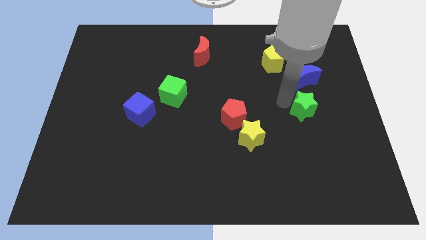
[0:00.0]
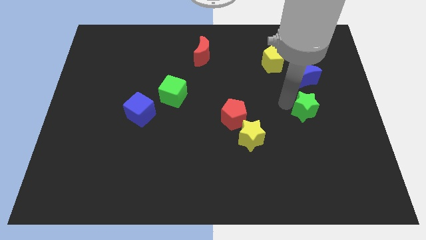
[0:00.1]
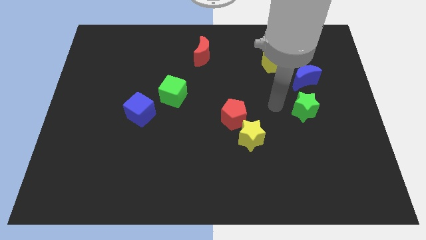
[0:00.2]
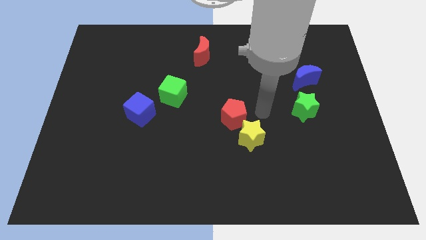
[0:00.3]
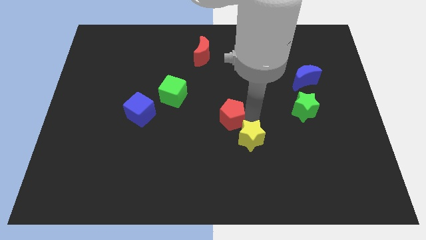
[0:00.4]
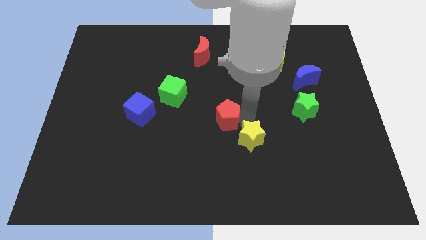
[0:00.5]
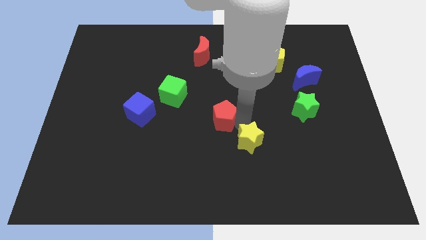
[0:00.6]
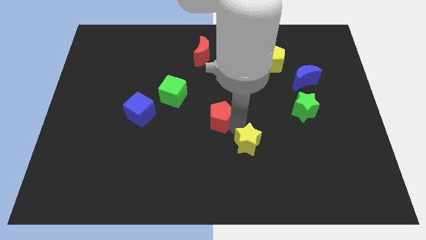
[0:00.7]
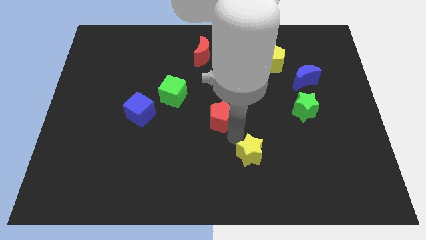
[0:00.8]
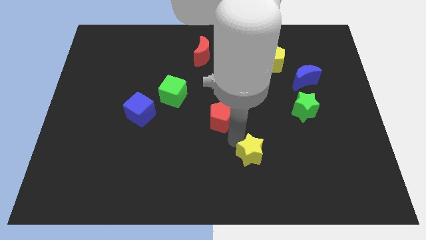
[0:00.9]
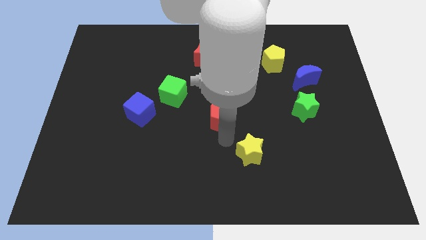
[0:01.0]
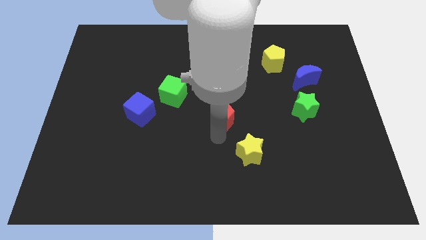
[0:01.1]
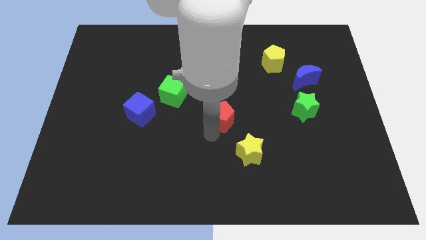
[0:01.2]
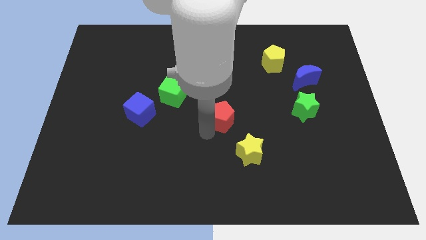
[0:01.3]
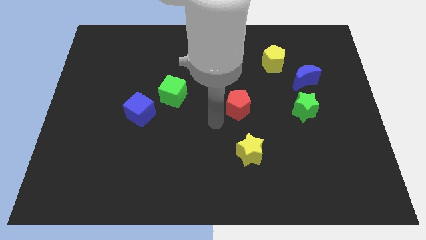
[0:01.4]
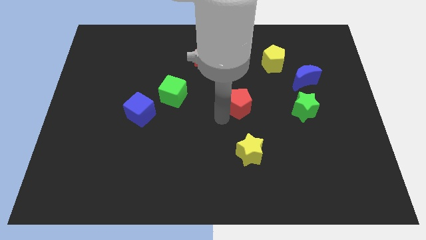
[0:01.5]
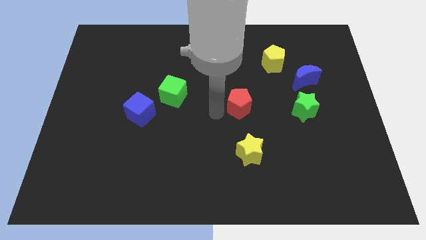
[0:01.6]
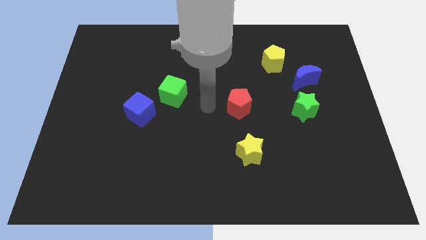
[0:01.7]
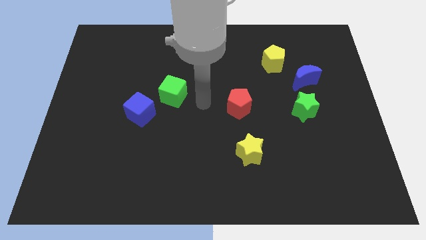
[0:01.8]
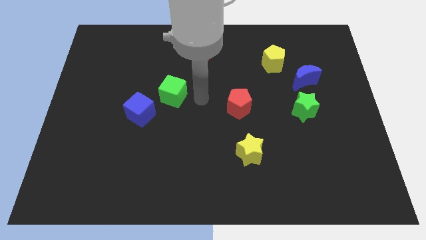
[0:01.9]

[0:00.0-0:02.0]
move the red pentagon to the left of the green star

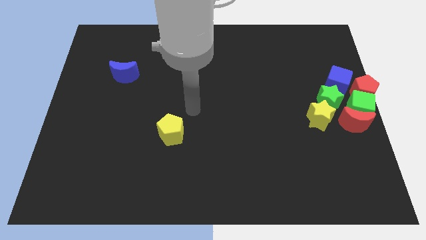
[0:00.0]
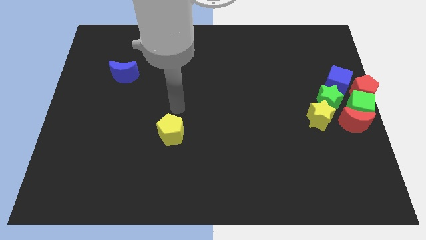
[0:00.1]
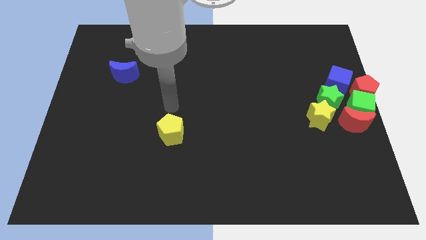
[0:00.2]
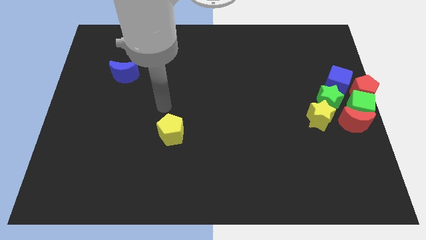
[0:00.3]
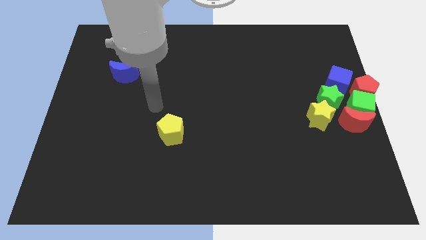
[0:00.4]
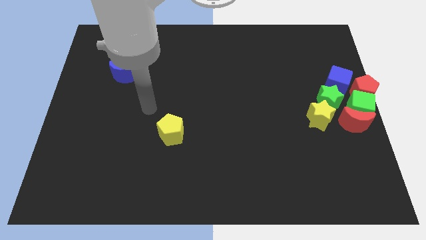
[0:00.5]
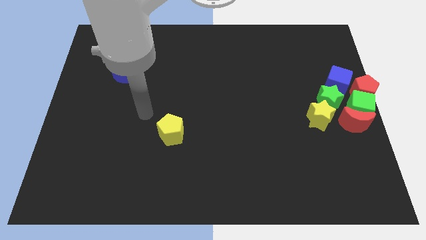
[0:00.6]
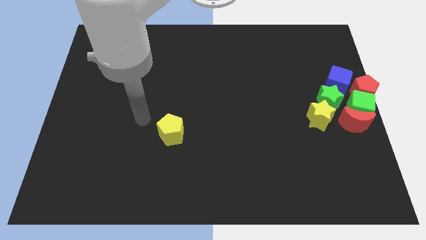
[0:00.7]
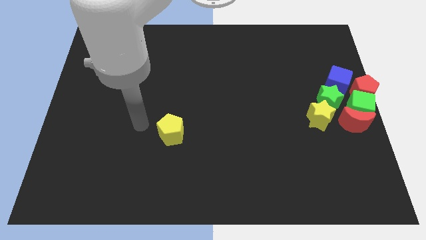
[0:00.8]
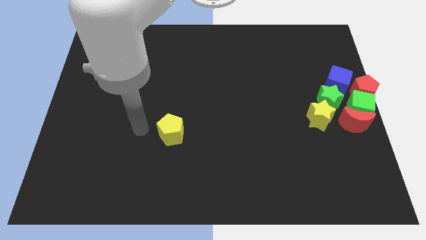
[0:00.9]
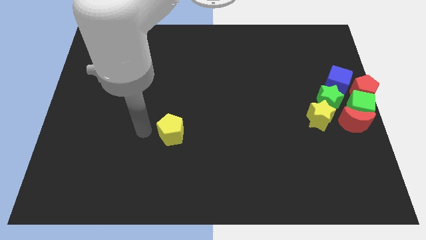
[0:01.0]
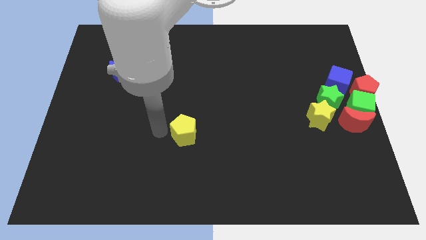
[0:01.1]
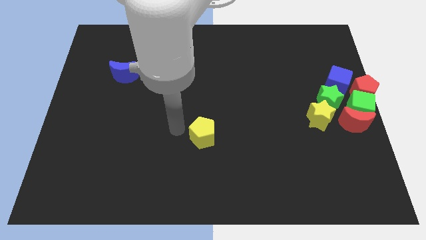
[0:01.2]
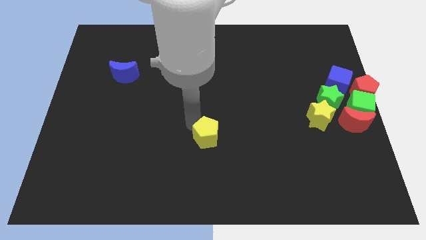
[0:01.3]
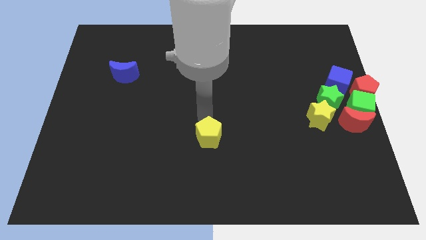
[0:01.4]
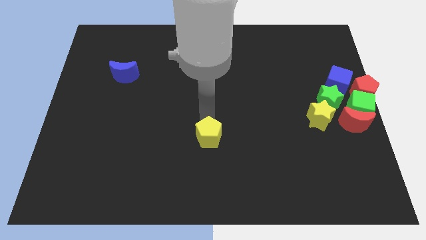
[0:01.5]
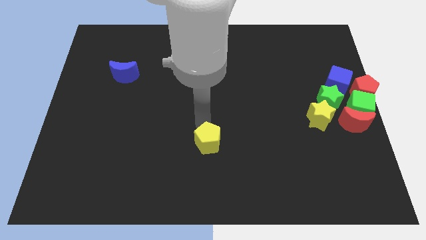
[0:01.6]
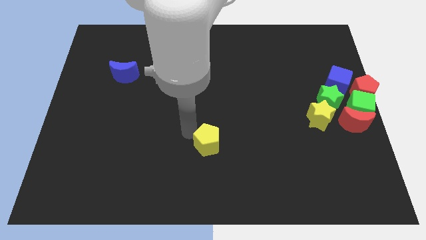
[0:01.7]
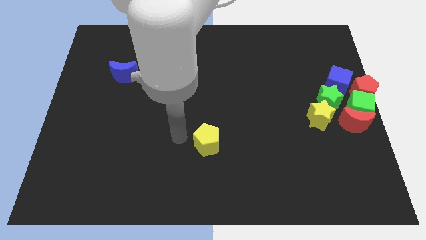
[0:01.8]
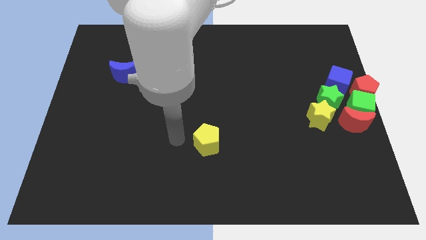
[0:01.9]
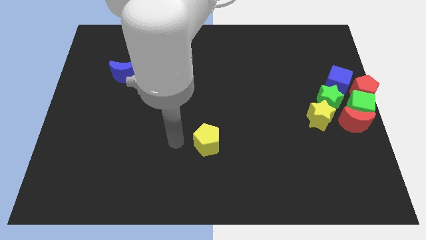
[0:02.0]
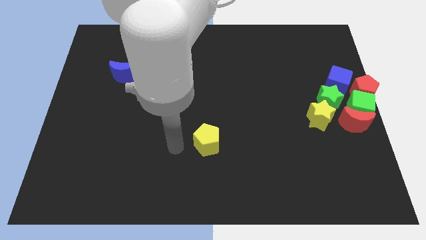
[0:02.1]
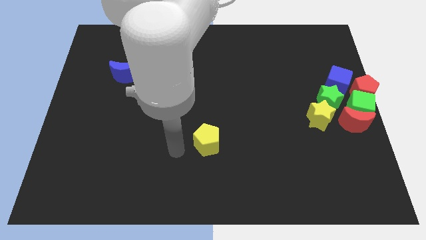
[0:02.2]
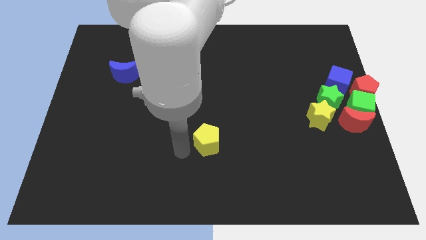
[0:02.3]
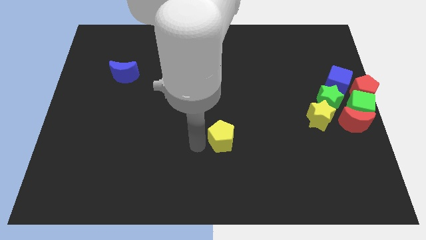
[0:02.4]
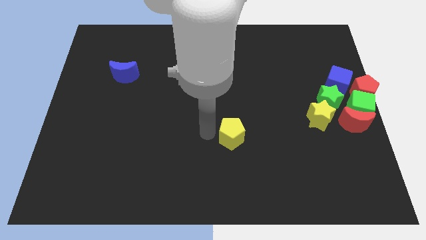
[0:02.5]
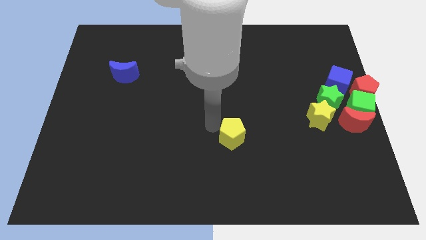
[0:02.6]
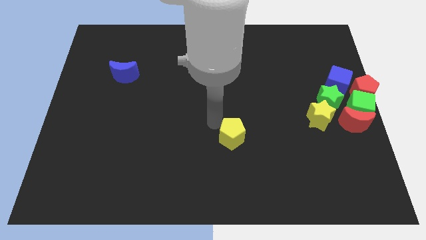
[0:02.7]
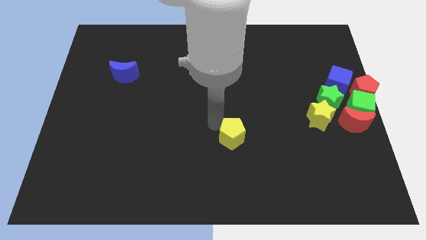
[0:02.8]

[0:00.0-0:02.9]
move the yellow pentagon to the center

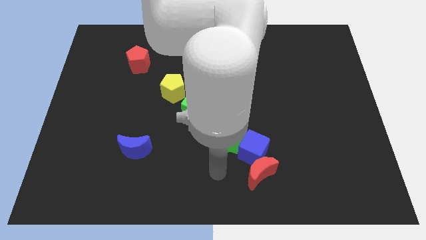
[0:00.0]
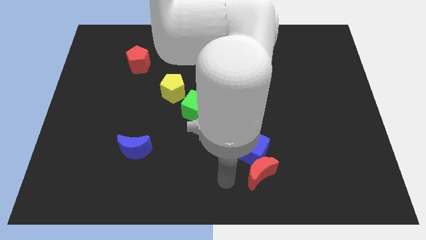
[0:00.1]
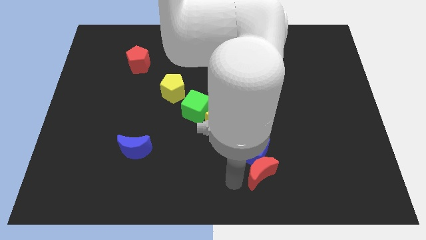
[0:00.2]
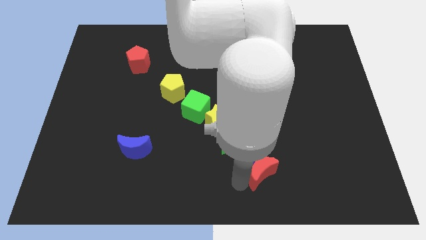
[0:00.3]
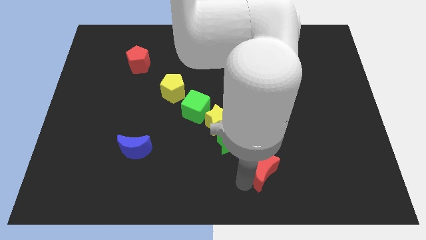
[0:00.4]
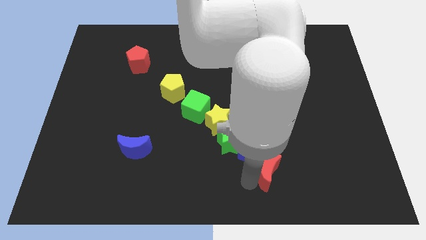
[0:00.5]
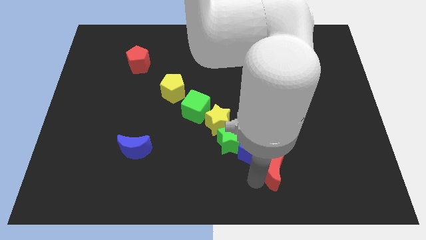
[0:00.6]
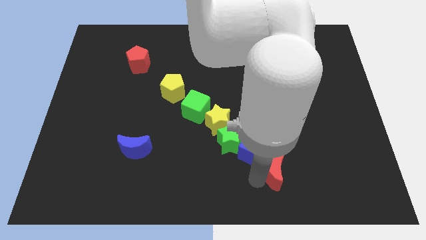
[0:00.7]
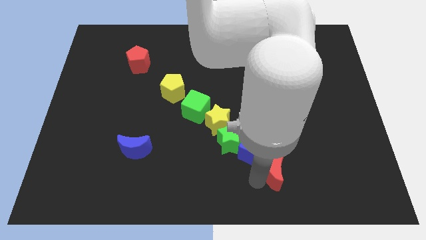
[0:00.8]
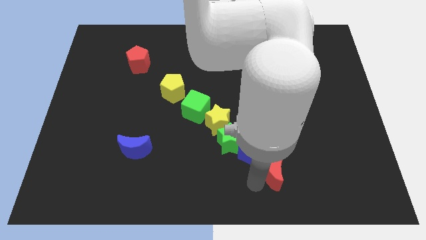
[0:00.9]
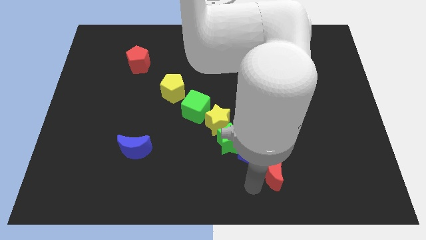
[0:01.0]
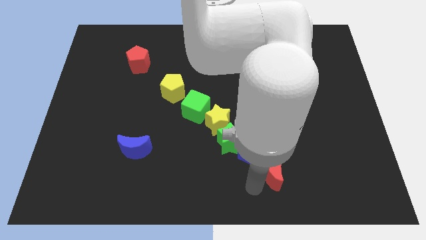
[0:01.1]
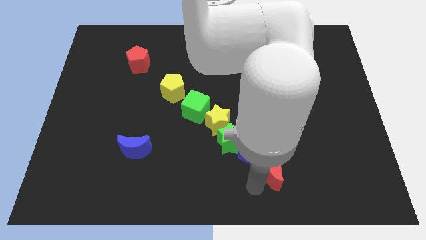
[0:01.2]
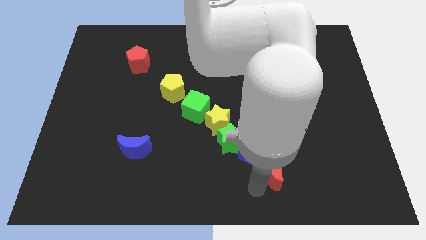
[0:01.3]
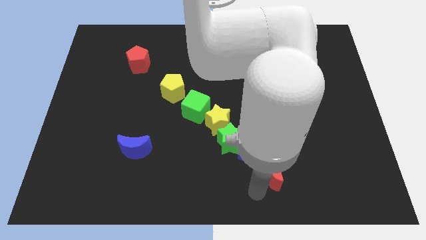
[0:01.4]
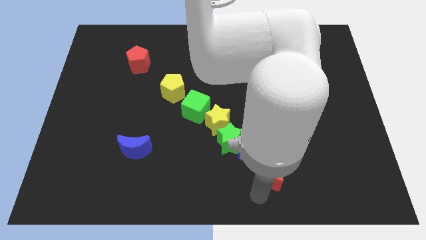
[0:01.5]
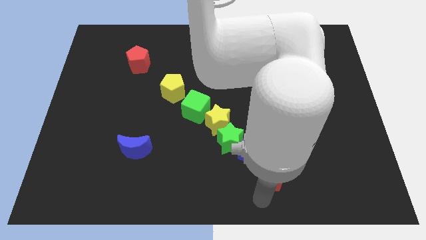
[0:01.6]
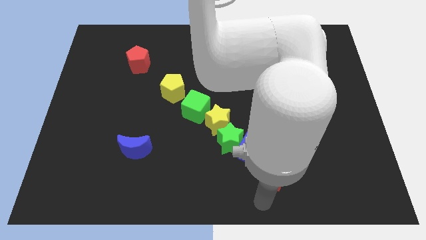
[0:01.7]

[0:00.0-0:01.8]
tap the red moon to the bottom side

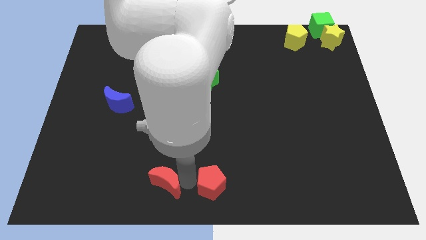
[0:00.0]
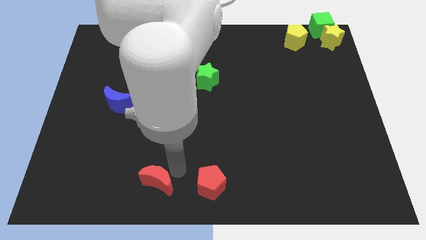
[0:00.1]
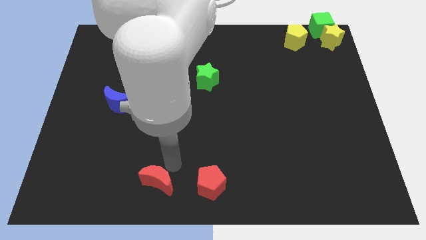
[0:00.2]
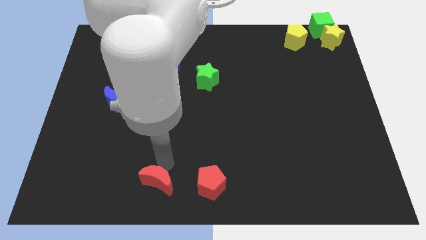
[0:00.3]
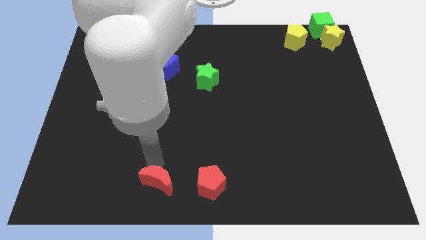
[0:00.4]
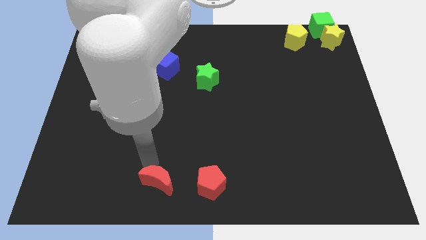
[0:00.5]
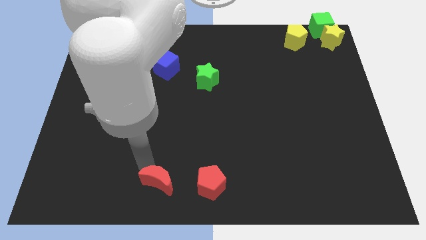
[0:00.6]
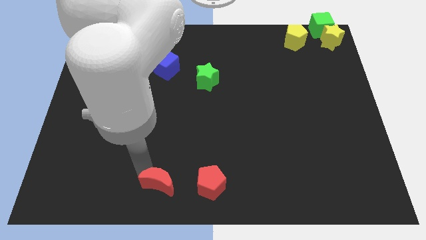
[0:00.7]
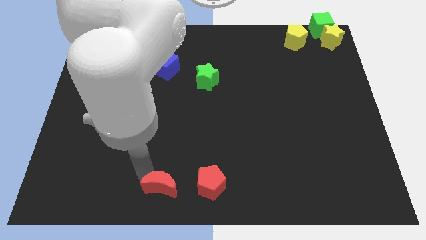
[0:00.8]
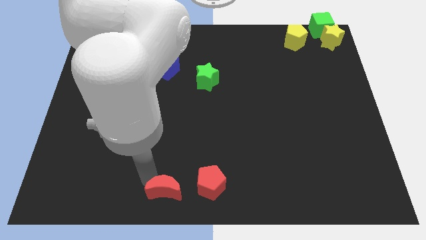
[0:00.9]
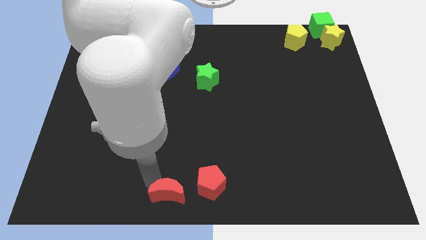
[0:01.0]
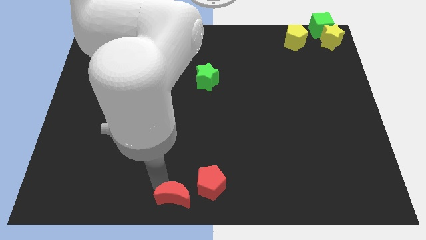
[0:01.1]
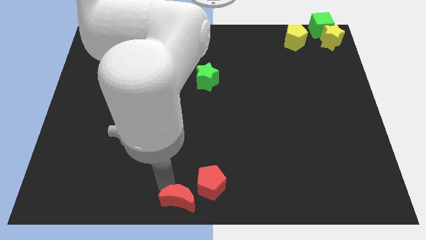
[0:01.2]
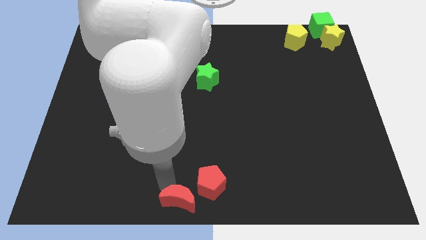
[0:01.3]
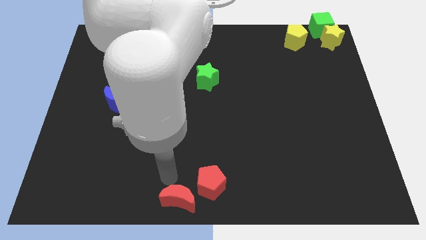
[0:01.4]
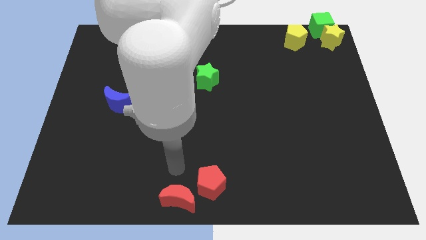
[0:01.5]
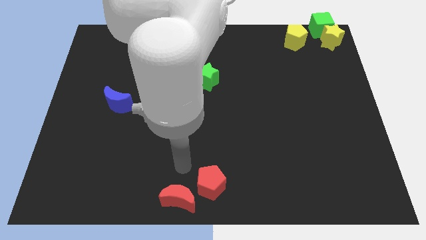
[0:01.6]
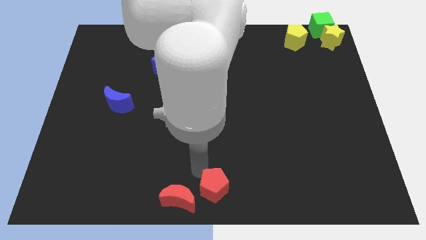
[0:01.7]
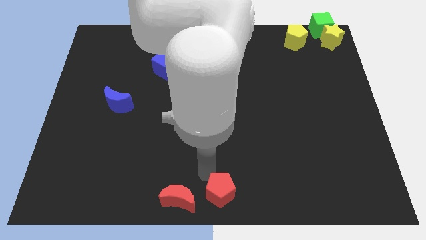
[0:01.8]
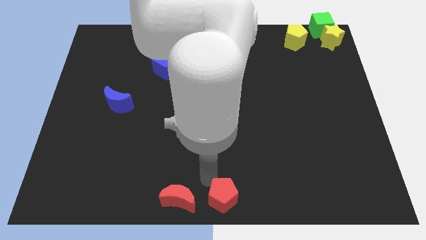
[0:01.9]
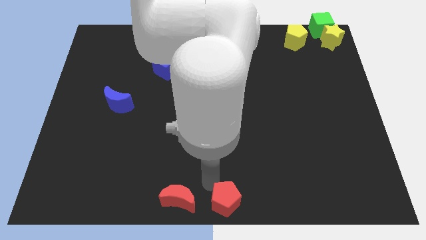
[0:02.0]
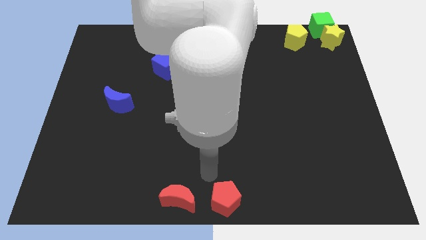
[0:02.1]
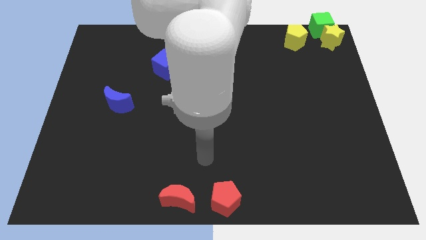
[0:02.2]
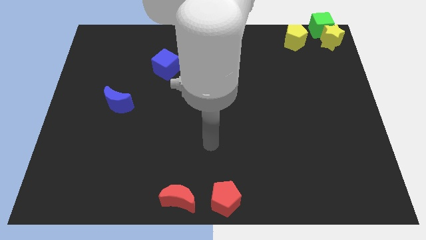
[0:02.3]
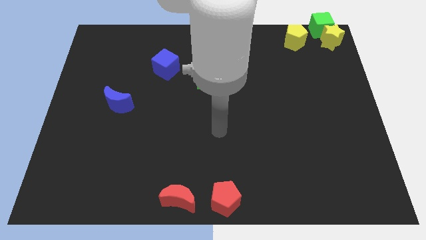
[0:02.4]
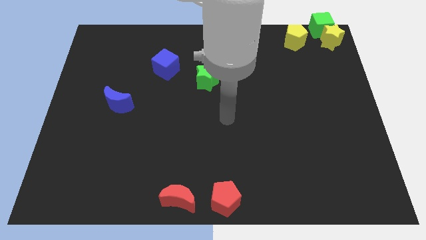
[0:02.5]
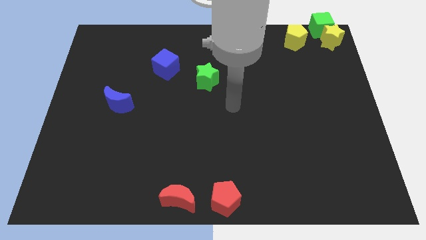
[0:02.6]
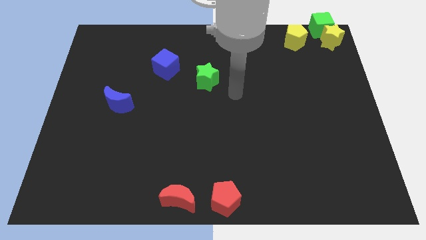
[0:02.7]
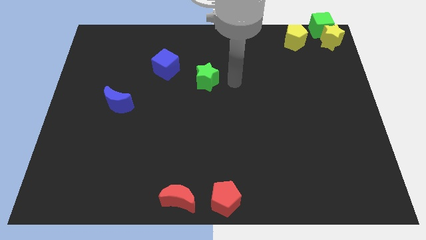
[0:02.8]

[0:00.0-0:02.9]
place your arm at the right side of the green star
